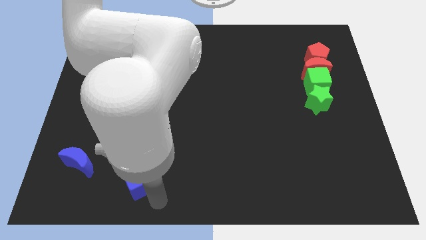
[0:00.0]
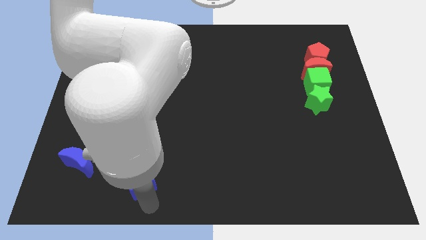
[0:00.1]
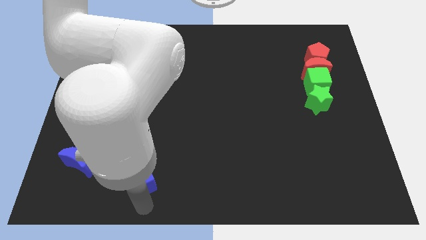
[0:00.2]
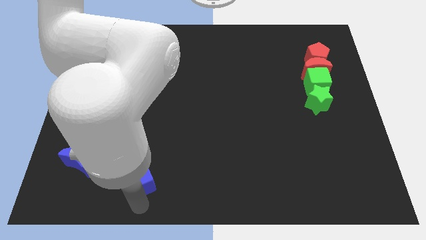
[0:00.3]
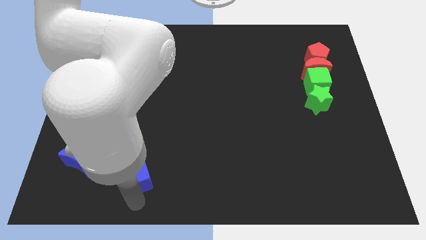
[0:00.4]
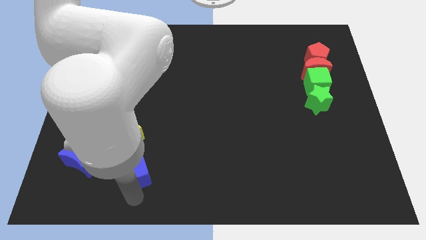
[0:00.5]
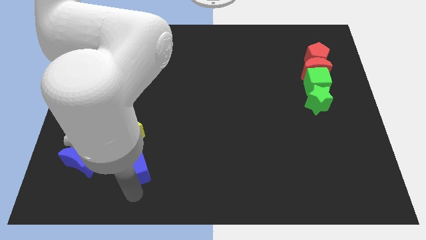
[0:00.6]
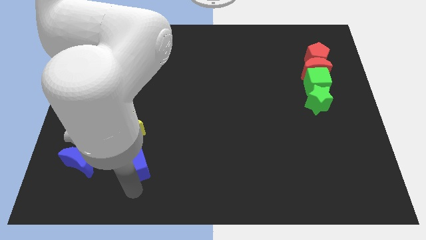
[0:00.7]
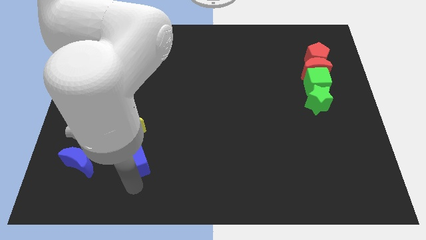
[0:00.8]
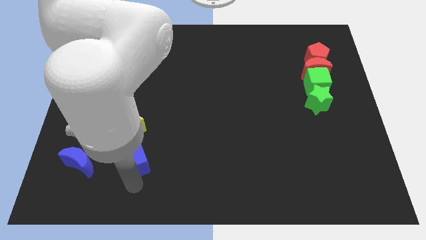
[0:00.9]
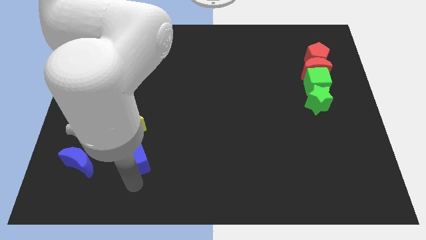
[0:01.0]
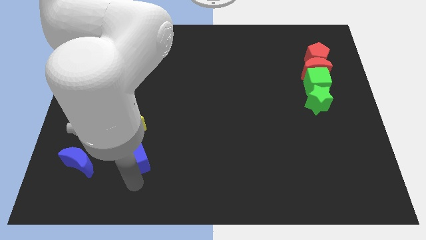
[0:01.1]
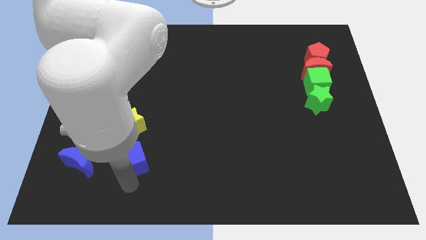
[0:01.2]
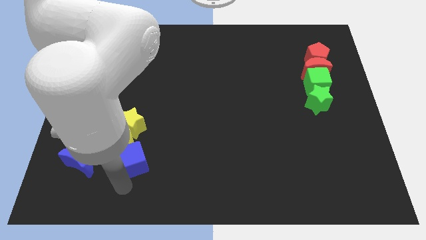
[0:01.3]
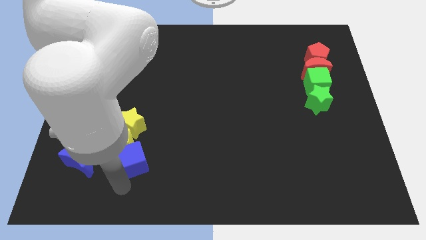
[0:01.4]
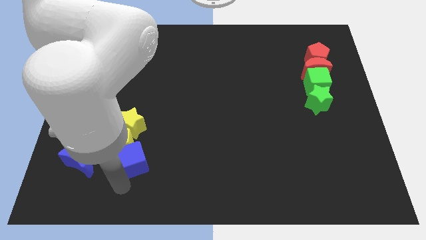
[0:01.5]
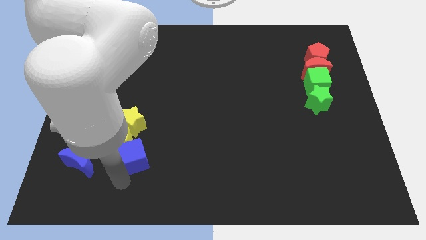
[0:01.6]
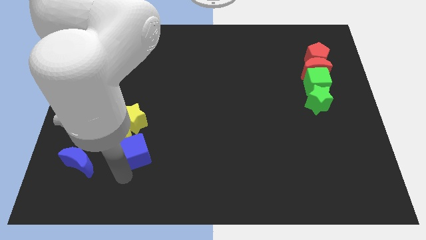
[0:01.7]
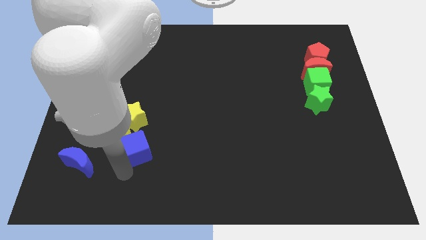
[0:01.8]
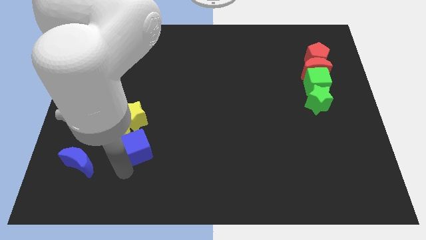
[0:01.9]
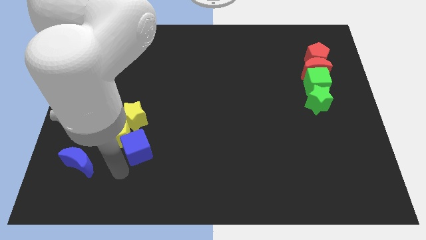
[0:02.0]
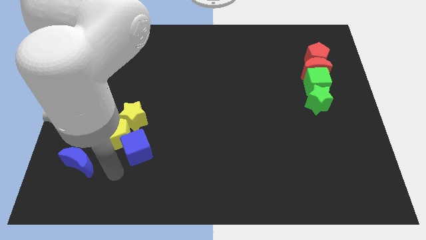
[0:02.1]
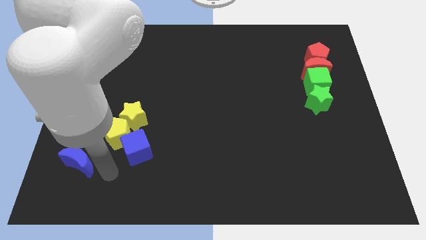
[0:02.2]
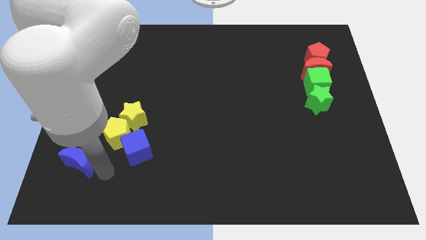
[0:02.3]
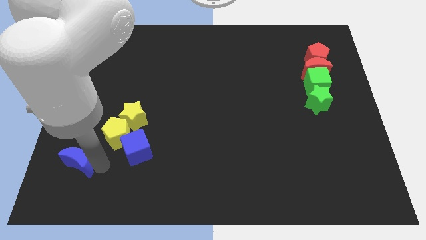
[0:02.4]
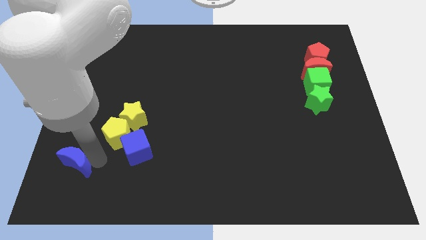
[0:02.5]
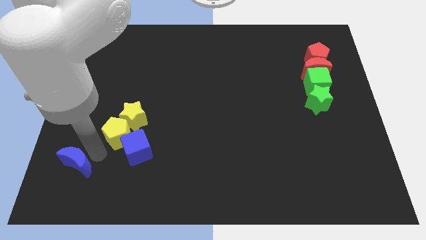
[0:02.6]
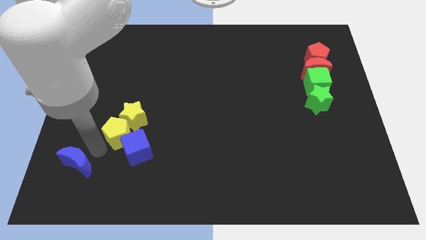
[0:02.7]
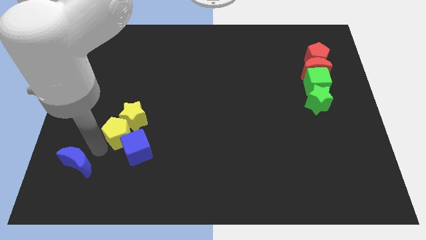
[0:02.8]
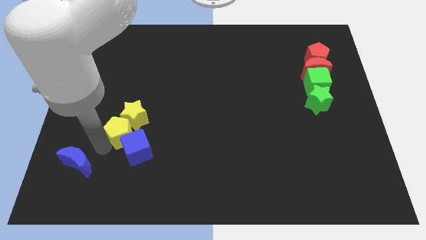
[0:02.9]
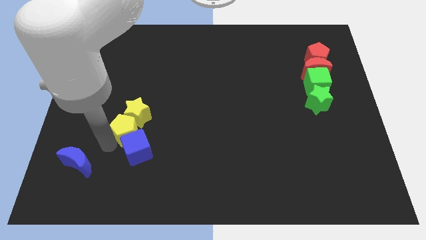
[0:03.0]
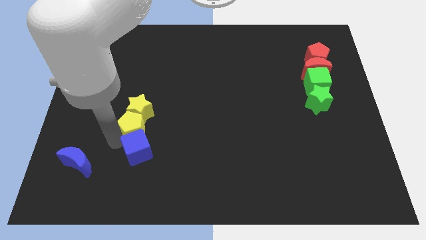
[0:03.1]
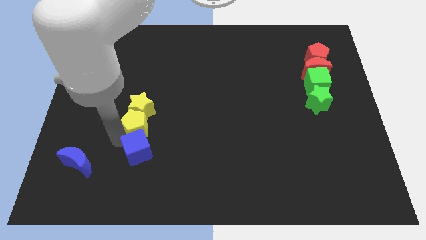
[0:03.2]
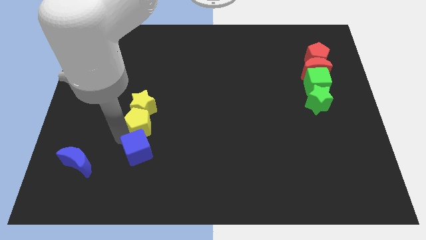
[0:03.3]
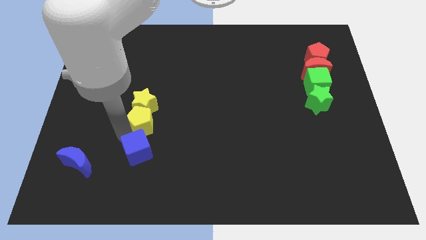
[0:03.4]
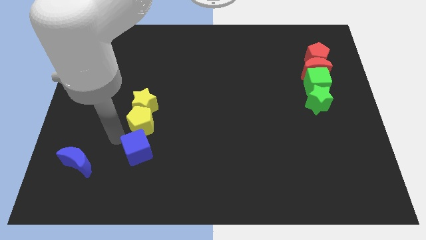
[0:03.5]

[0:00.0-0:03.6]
place yellow pentagon in between yellow star and blue cube

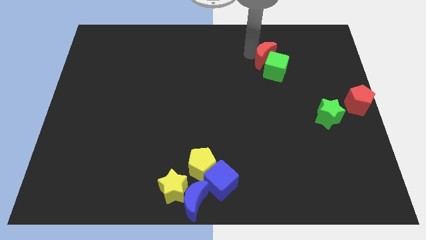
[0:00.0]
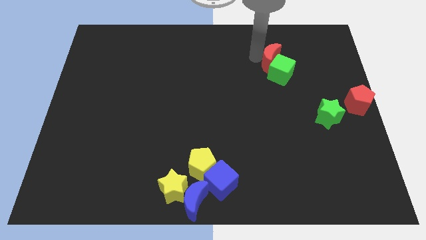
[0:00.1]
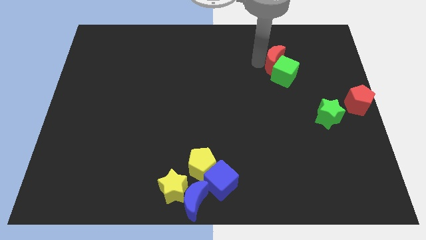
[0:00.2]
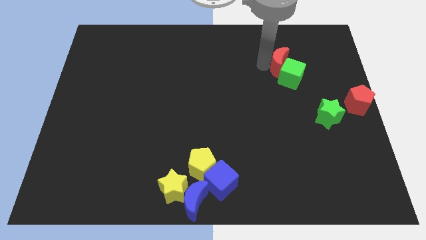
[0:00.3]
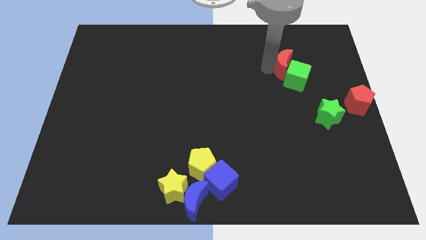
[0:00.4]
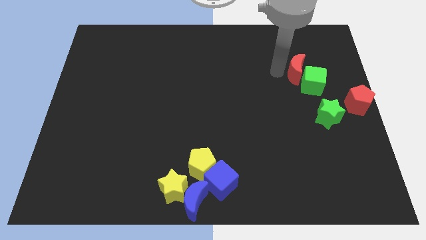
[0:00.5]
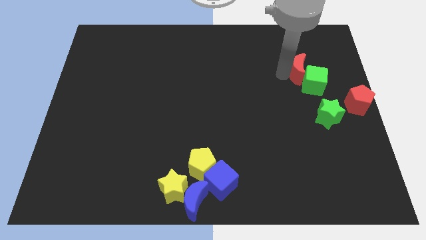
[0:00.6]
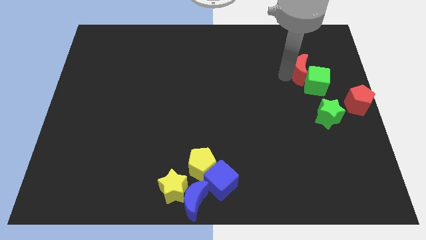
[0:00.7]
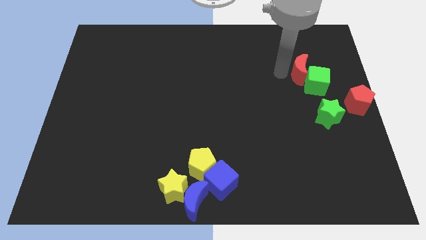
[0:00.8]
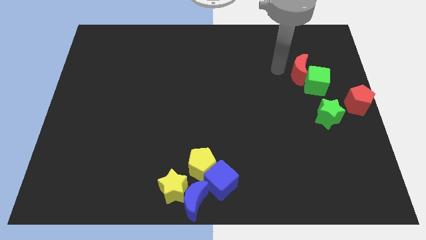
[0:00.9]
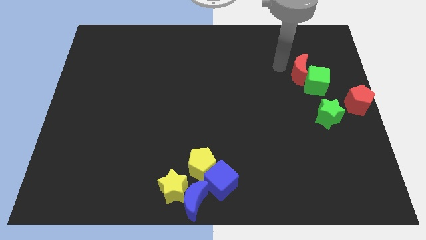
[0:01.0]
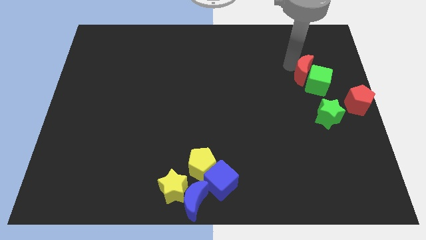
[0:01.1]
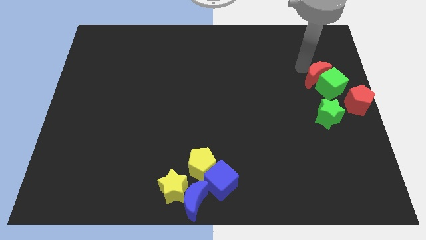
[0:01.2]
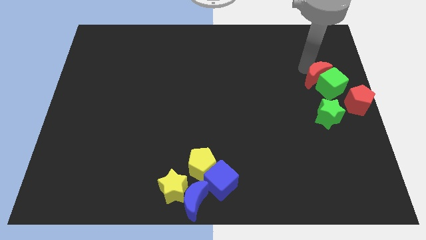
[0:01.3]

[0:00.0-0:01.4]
push green cube with the red moon

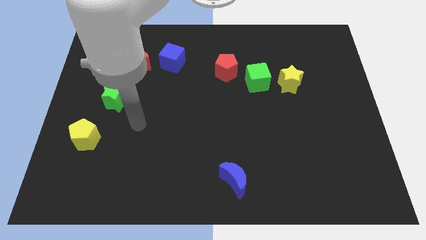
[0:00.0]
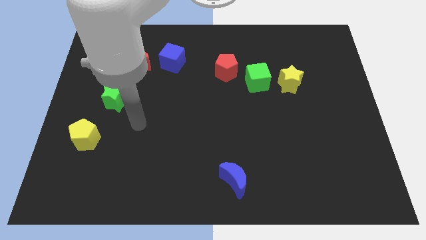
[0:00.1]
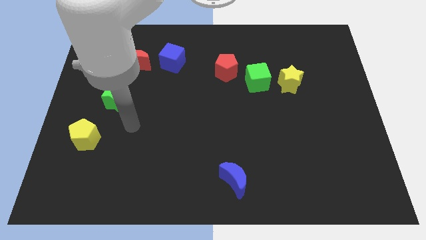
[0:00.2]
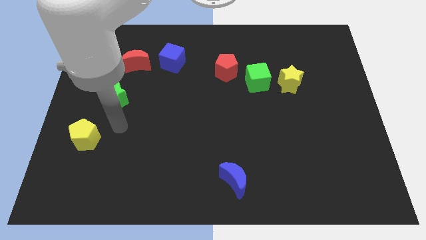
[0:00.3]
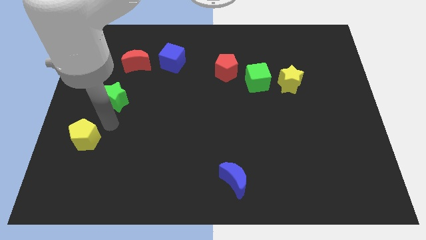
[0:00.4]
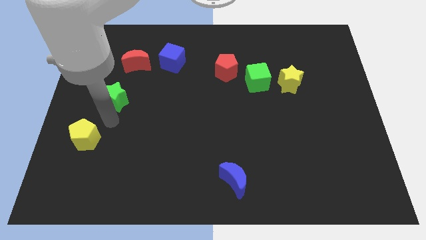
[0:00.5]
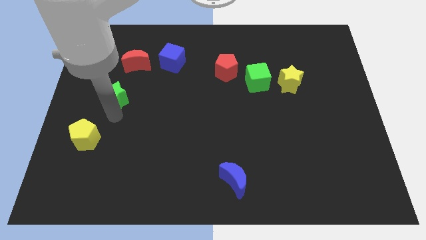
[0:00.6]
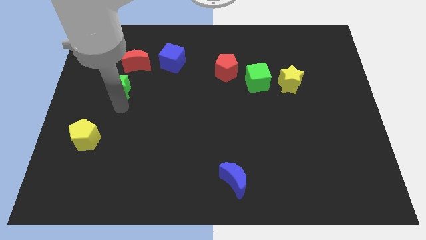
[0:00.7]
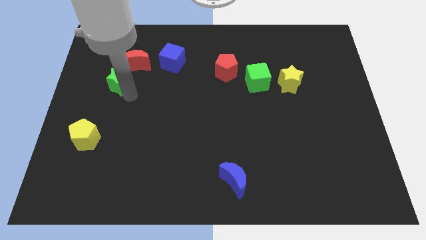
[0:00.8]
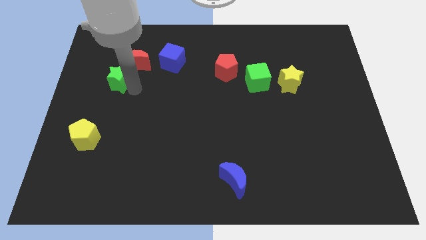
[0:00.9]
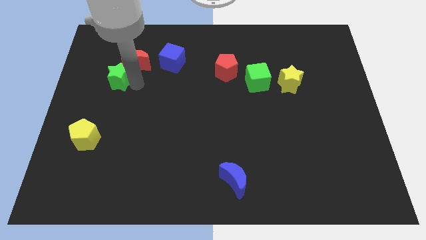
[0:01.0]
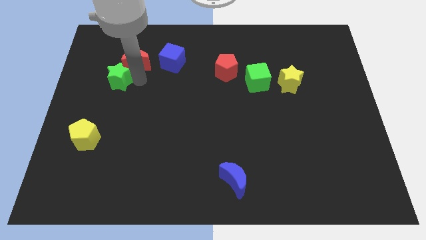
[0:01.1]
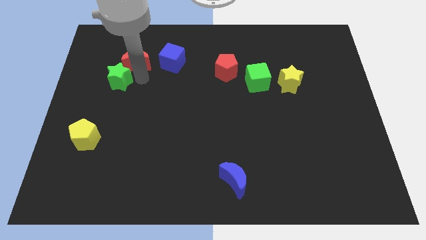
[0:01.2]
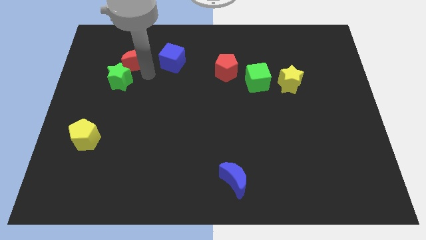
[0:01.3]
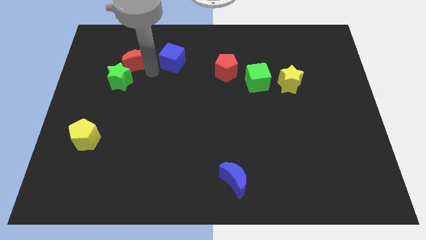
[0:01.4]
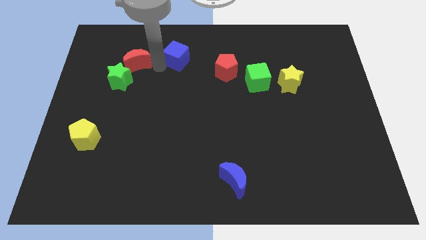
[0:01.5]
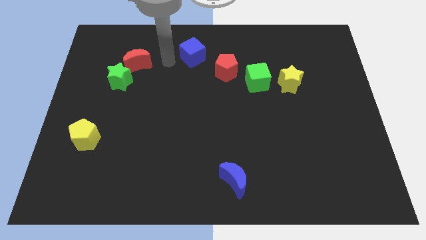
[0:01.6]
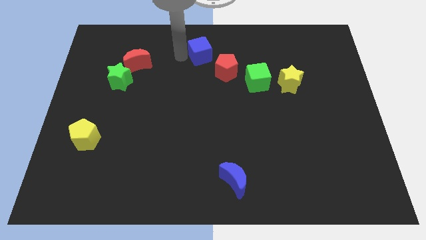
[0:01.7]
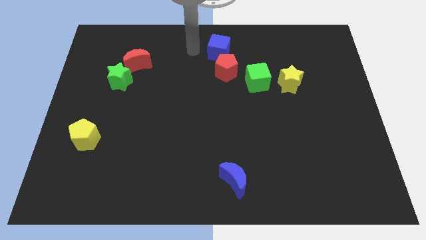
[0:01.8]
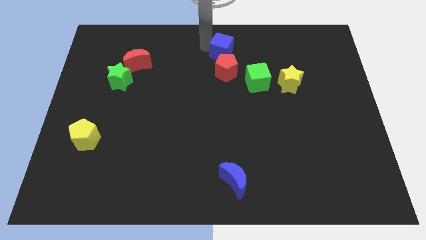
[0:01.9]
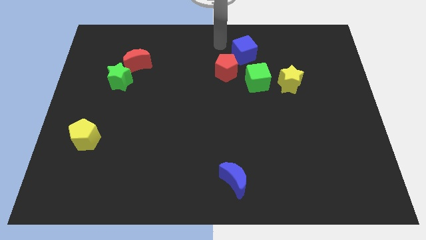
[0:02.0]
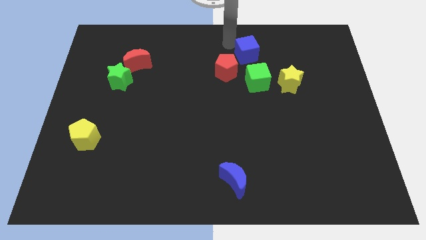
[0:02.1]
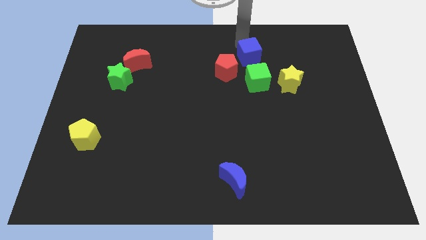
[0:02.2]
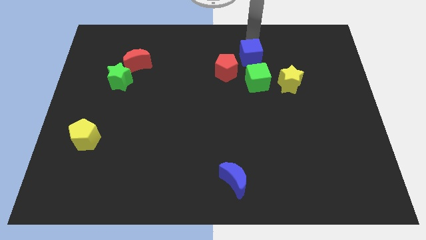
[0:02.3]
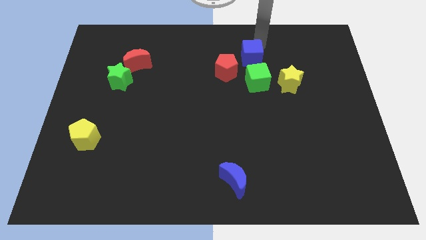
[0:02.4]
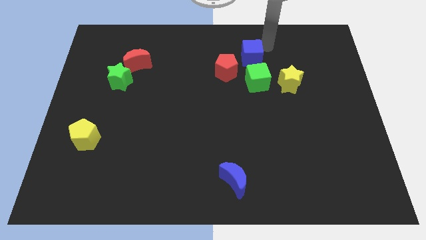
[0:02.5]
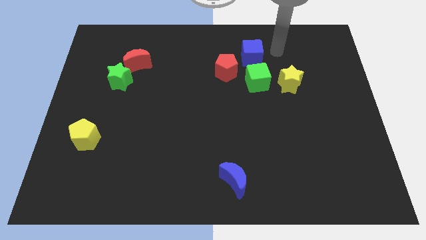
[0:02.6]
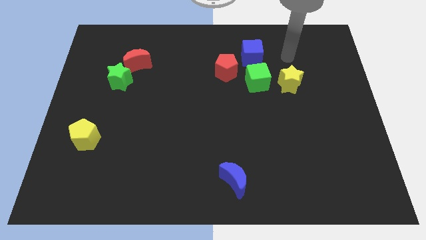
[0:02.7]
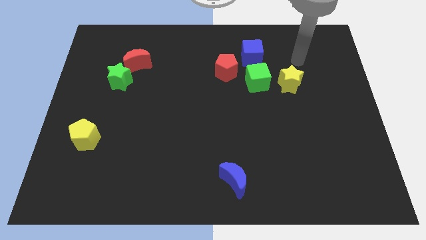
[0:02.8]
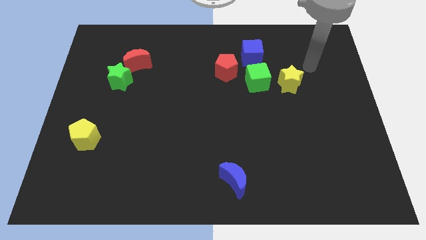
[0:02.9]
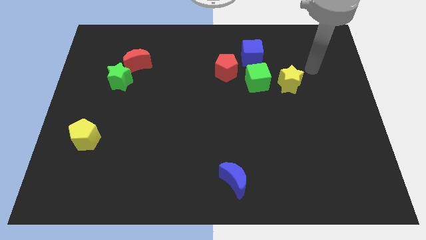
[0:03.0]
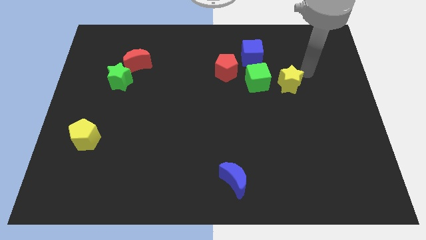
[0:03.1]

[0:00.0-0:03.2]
move the blue cube above the green cube

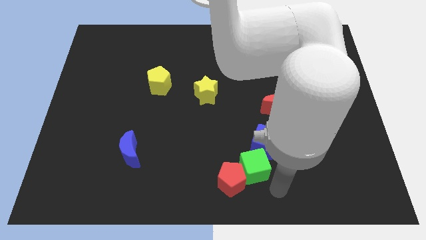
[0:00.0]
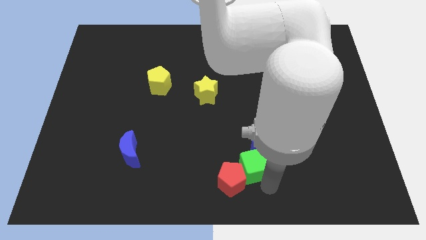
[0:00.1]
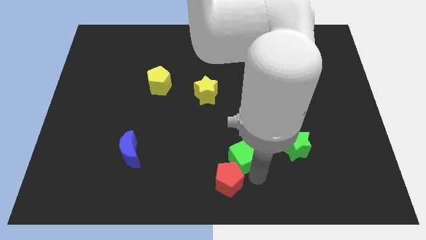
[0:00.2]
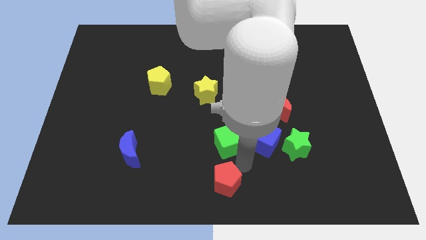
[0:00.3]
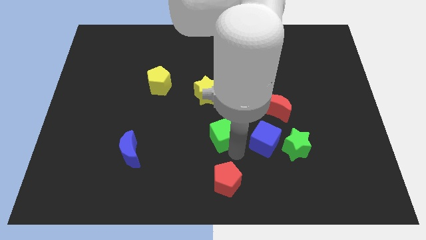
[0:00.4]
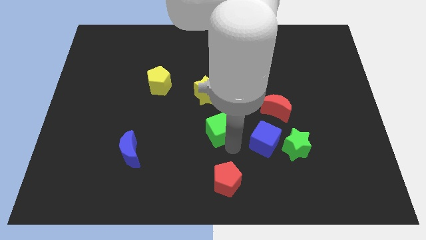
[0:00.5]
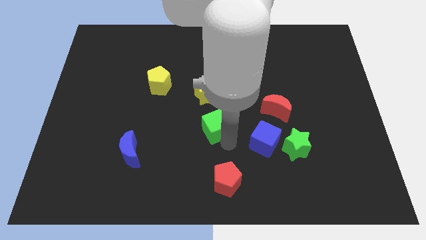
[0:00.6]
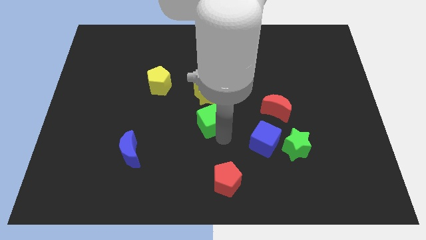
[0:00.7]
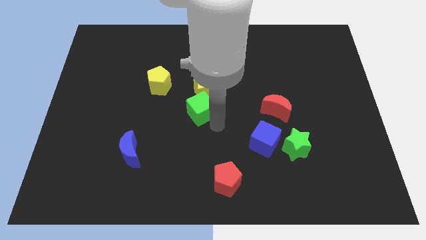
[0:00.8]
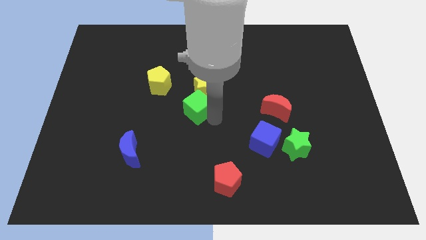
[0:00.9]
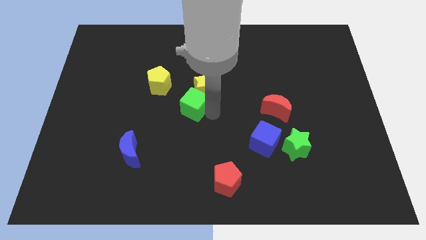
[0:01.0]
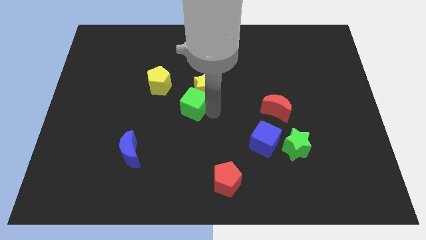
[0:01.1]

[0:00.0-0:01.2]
make the green cube touch the bottom left side of the yellow star
